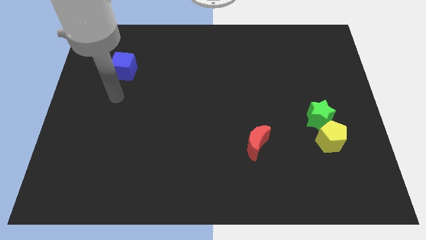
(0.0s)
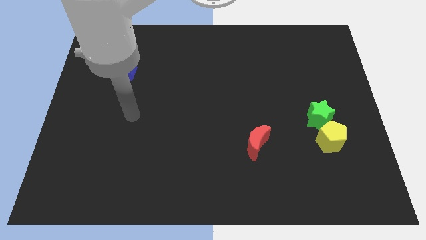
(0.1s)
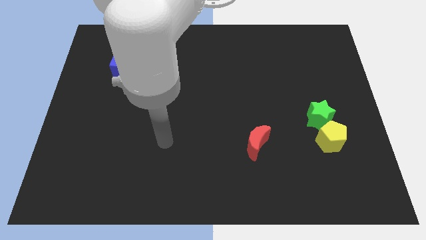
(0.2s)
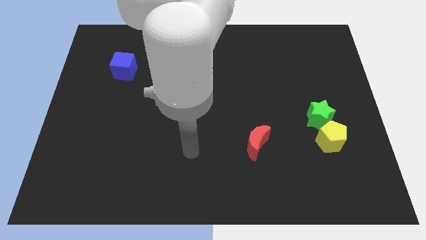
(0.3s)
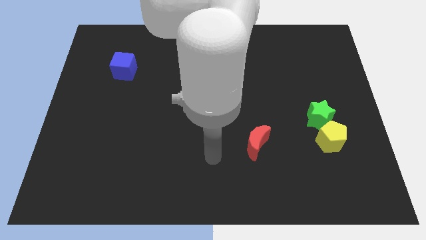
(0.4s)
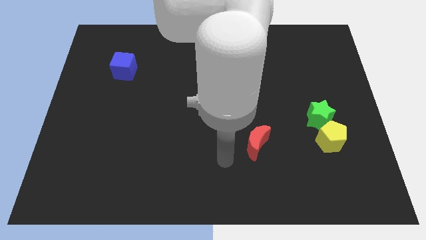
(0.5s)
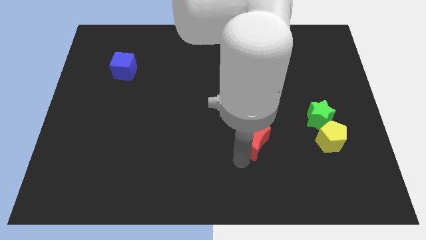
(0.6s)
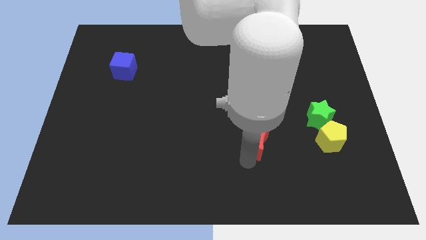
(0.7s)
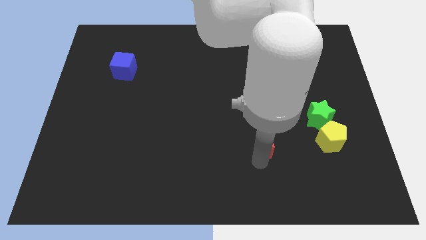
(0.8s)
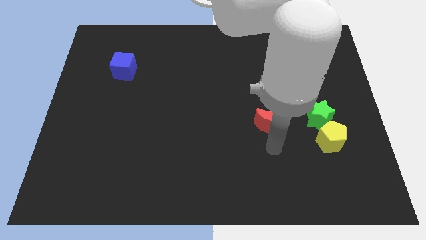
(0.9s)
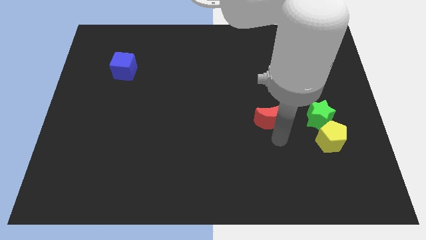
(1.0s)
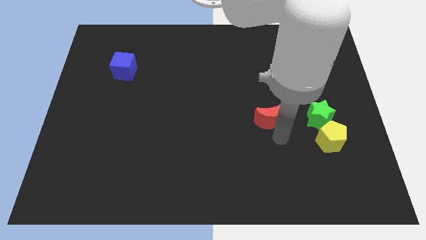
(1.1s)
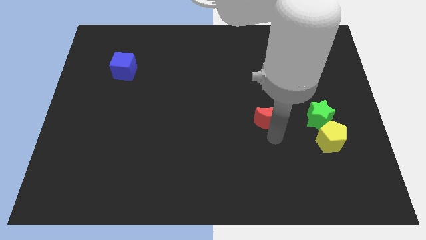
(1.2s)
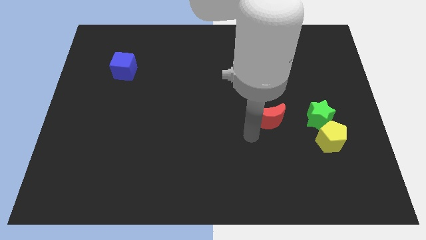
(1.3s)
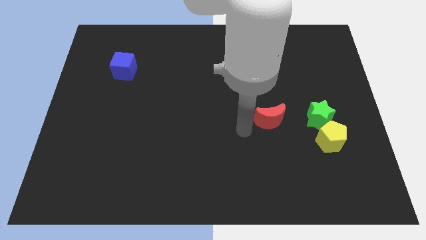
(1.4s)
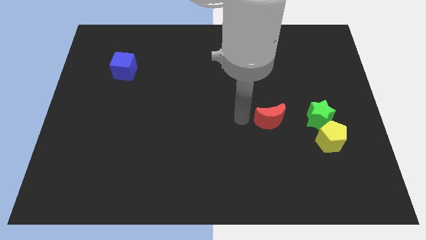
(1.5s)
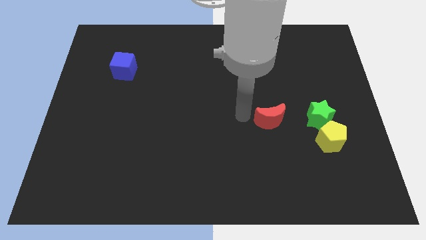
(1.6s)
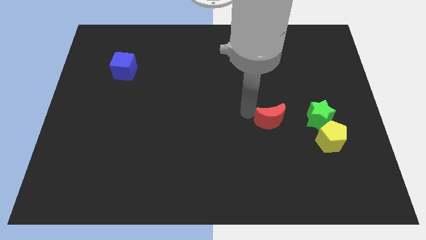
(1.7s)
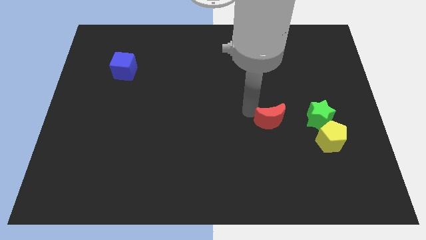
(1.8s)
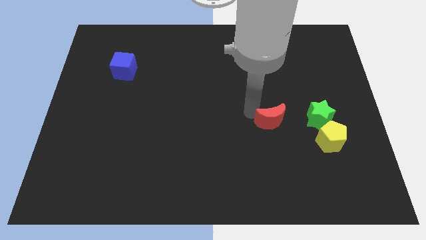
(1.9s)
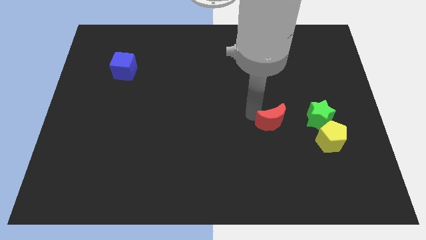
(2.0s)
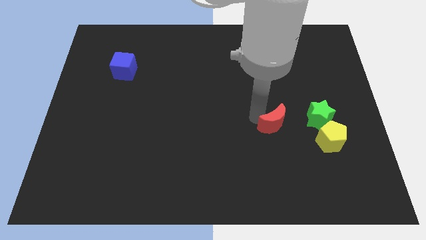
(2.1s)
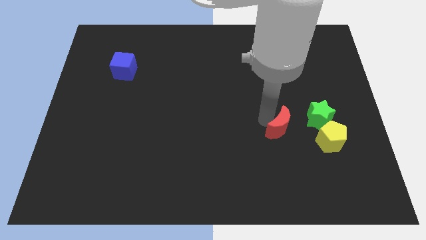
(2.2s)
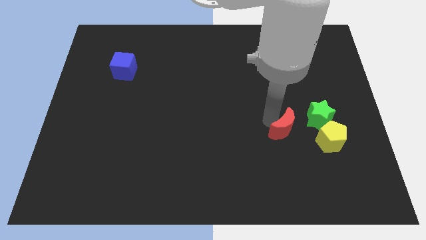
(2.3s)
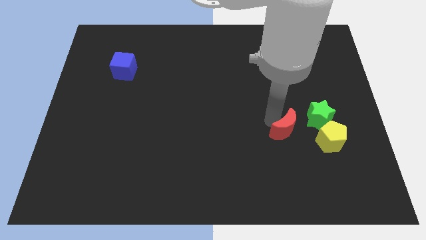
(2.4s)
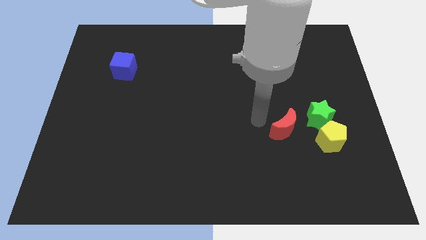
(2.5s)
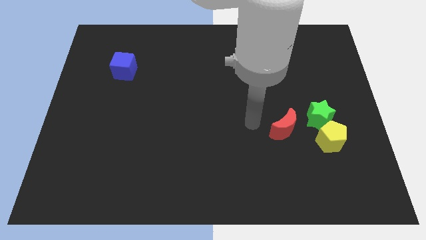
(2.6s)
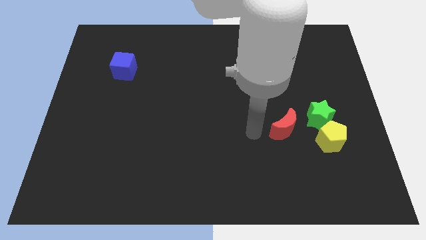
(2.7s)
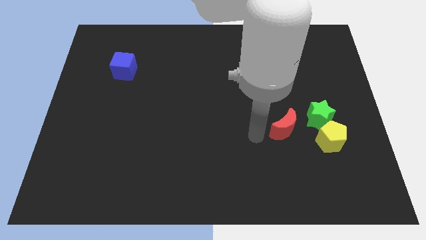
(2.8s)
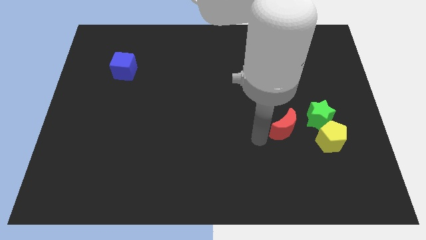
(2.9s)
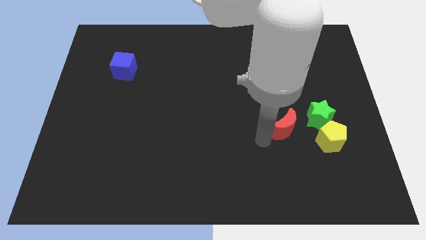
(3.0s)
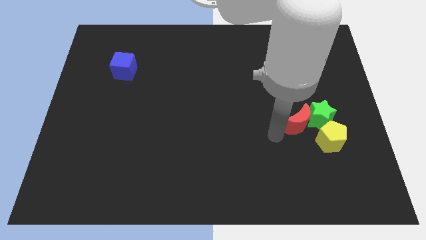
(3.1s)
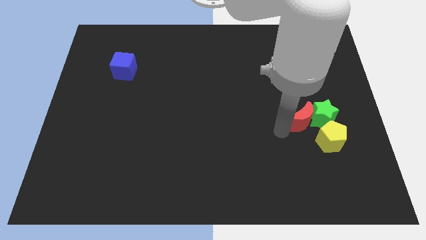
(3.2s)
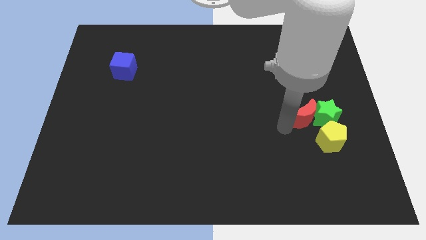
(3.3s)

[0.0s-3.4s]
push the red block next to the green block

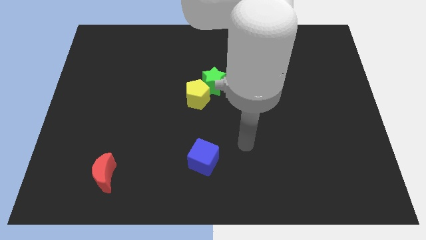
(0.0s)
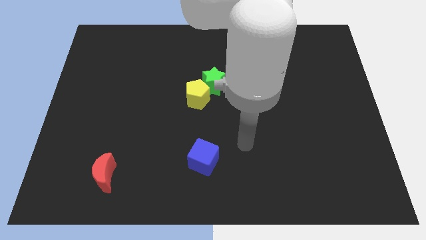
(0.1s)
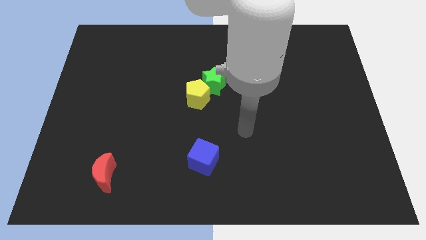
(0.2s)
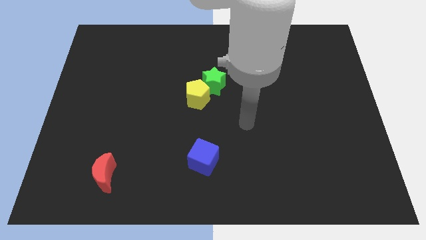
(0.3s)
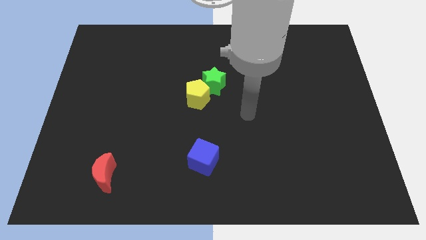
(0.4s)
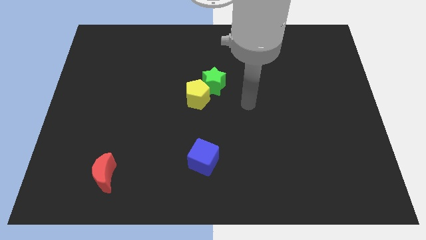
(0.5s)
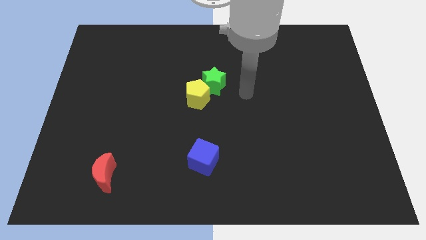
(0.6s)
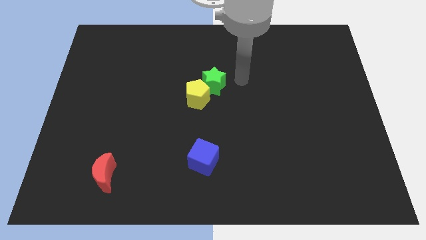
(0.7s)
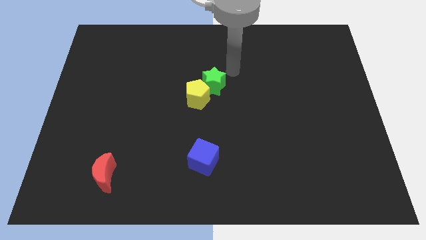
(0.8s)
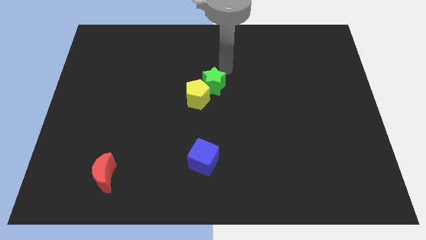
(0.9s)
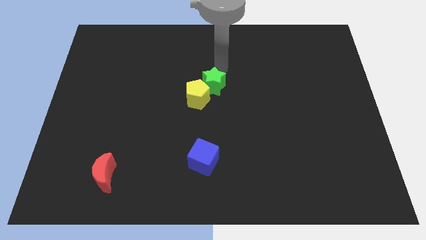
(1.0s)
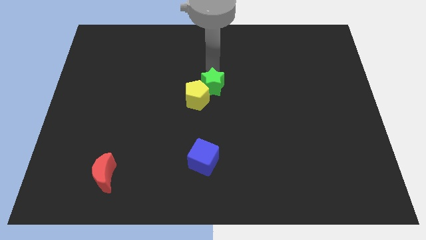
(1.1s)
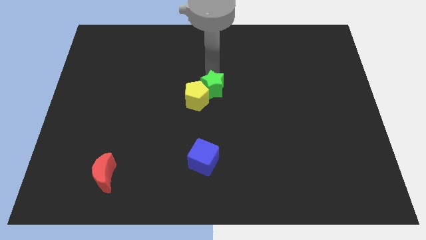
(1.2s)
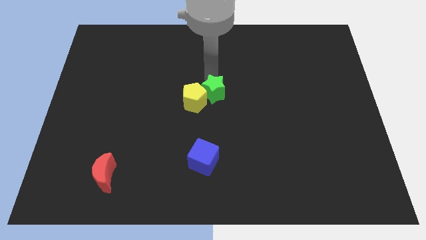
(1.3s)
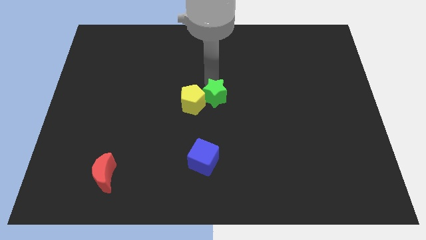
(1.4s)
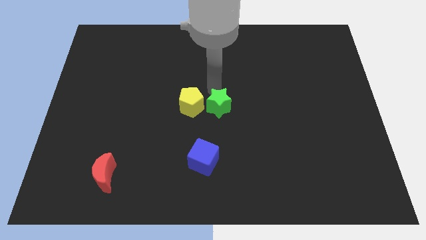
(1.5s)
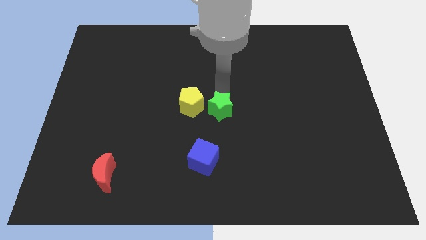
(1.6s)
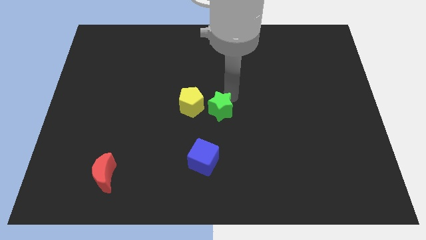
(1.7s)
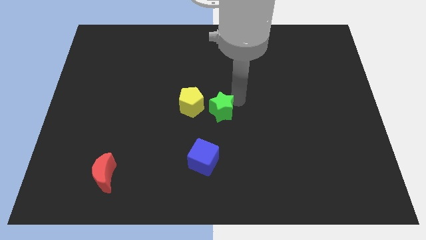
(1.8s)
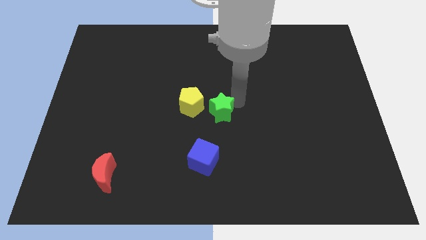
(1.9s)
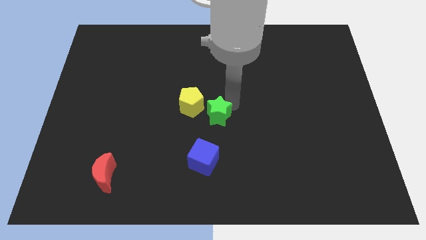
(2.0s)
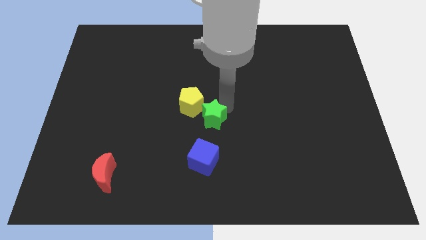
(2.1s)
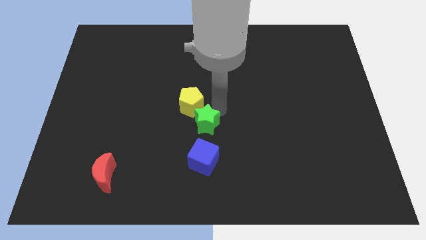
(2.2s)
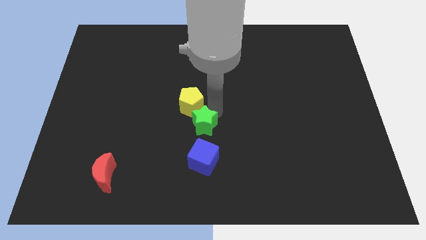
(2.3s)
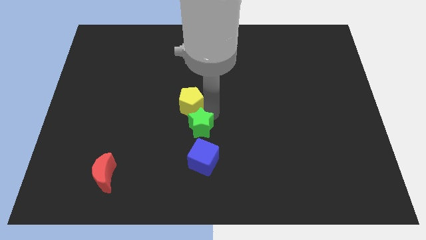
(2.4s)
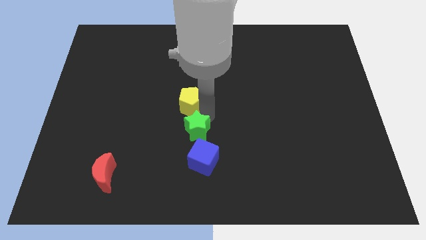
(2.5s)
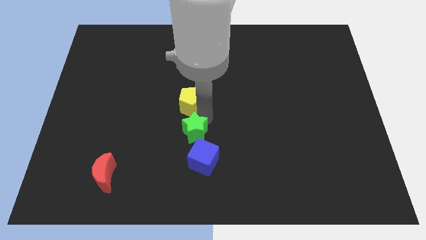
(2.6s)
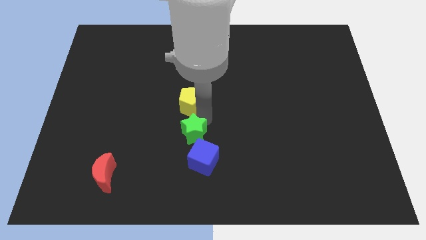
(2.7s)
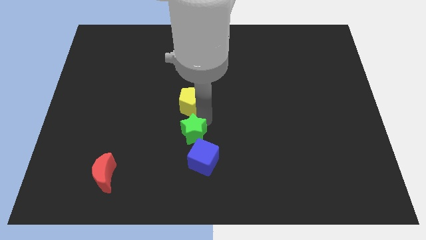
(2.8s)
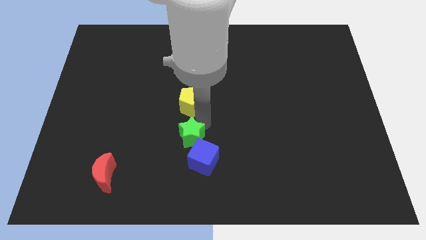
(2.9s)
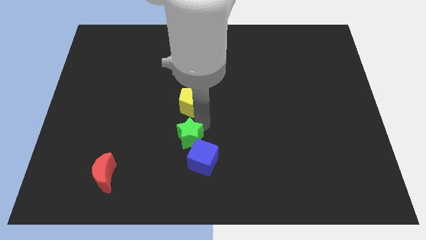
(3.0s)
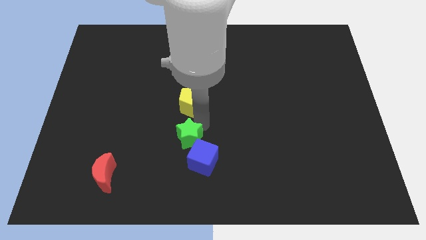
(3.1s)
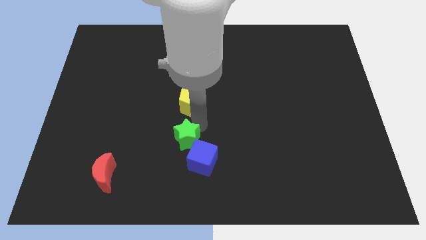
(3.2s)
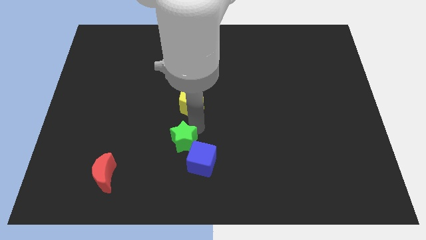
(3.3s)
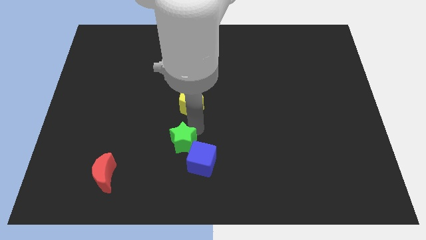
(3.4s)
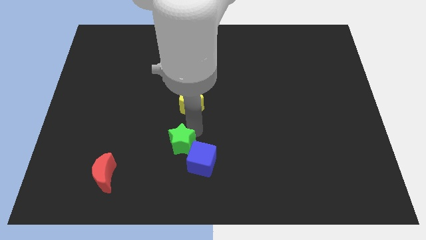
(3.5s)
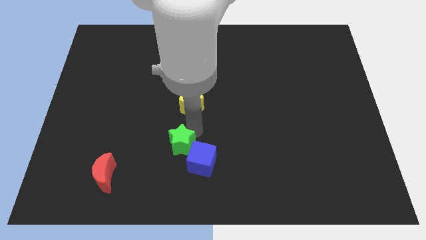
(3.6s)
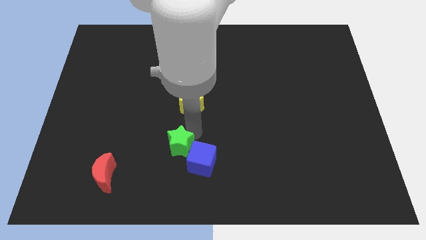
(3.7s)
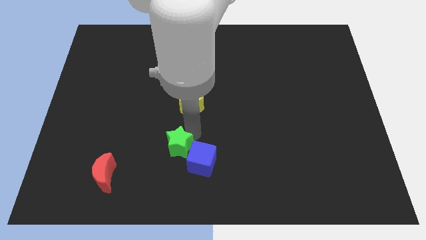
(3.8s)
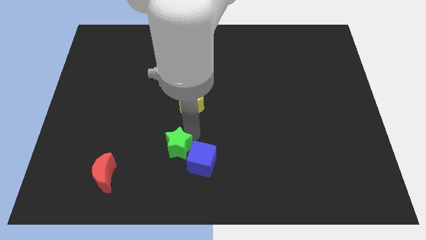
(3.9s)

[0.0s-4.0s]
slide the green star close to the cube

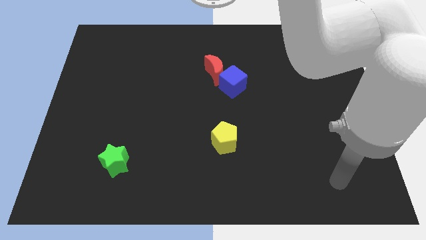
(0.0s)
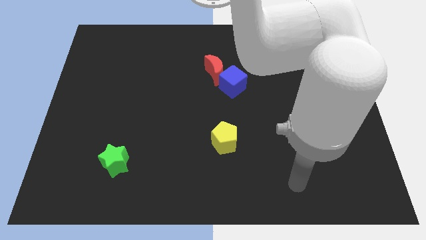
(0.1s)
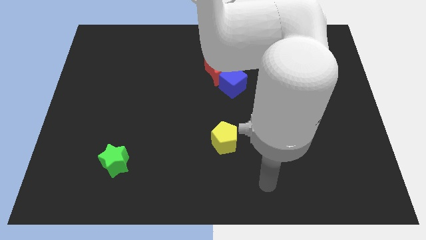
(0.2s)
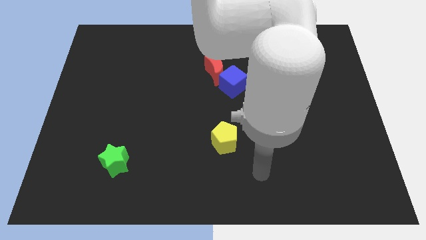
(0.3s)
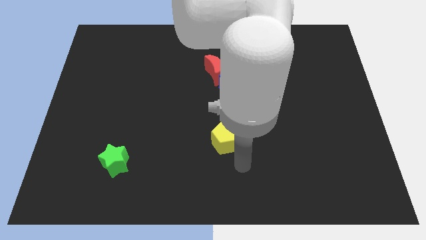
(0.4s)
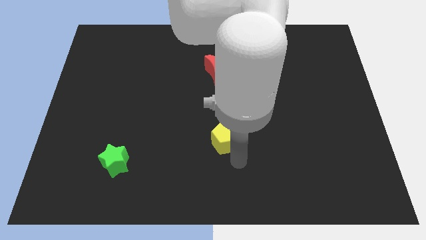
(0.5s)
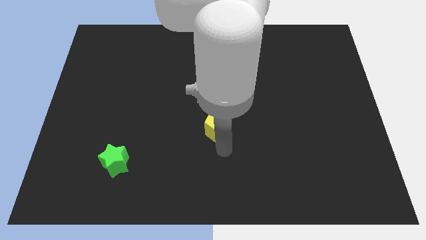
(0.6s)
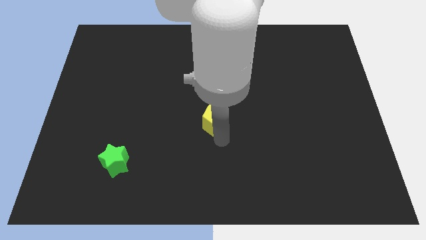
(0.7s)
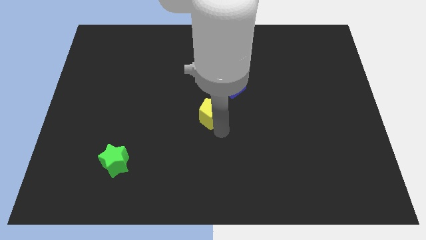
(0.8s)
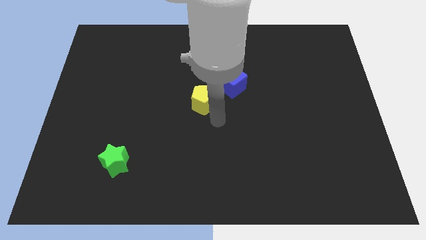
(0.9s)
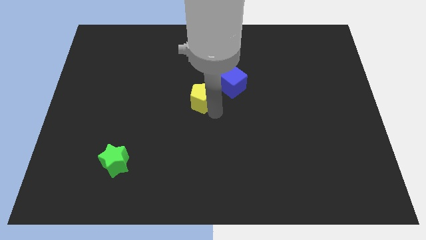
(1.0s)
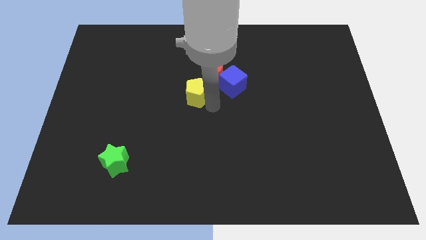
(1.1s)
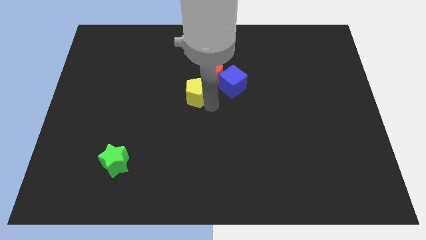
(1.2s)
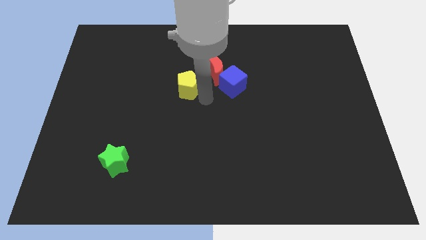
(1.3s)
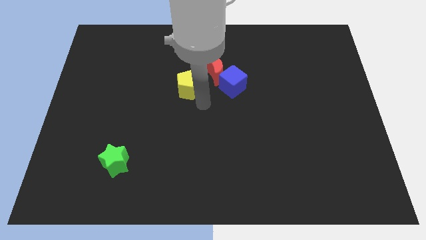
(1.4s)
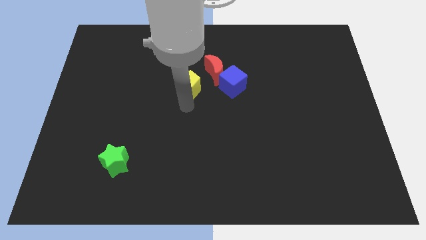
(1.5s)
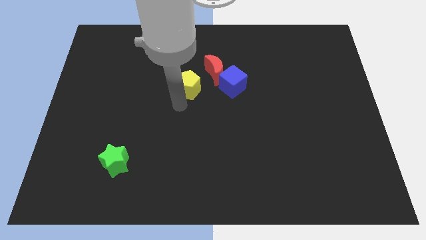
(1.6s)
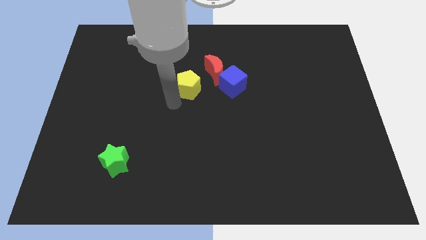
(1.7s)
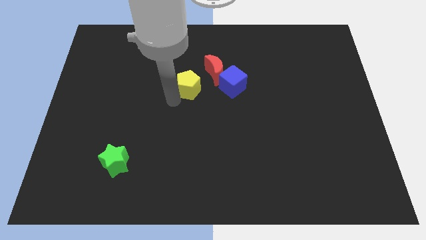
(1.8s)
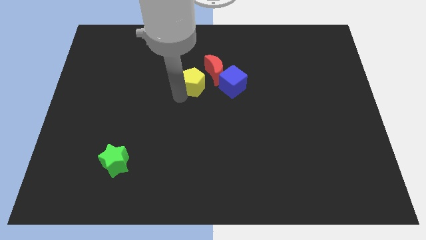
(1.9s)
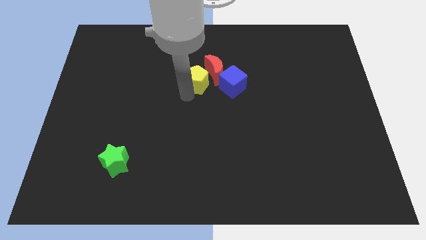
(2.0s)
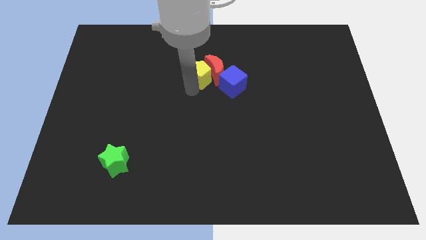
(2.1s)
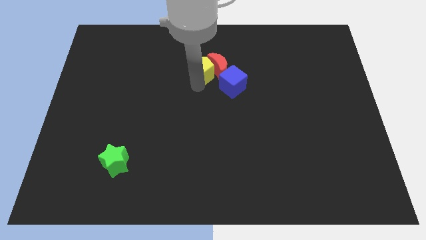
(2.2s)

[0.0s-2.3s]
put the yellow pentagon next to the red moon
